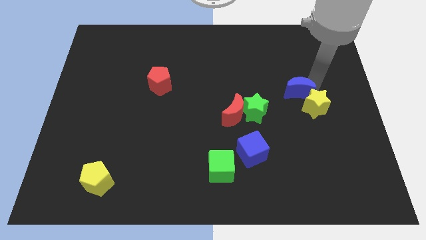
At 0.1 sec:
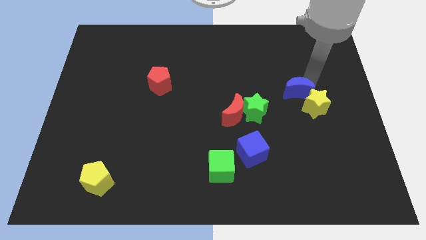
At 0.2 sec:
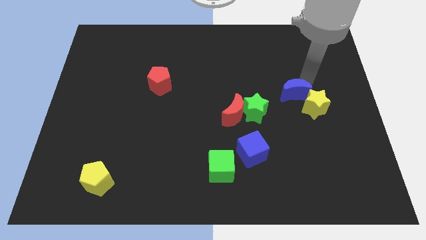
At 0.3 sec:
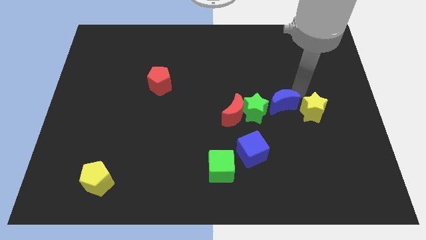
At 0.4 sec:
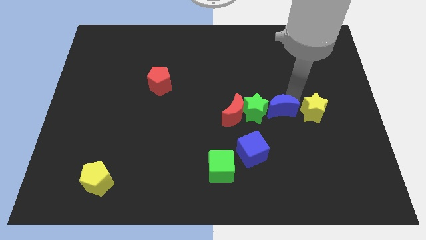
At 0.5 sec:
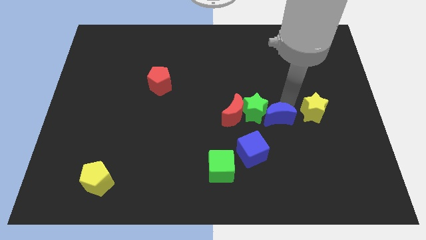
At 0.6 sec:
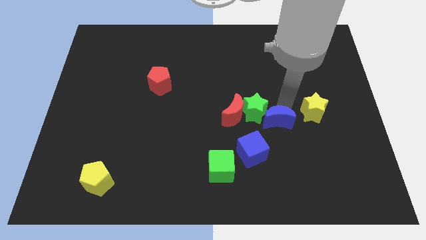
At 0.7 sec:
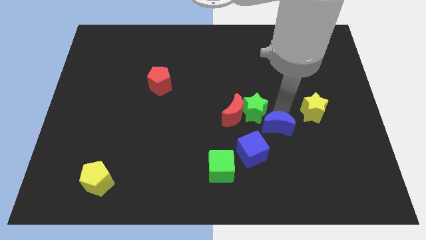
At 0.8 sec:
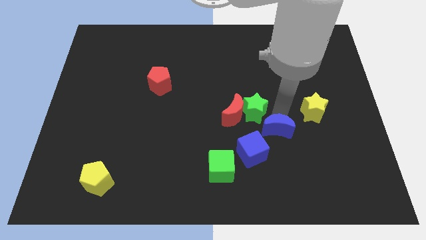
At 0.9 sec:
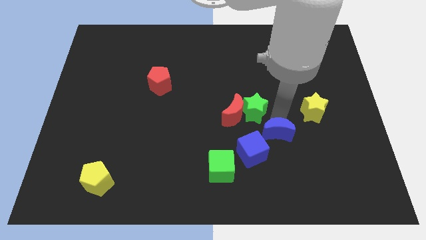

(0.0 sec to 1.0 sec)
separate the blue crescent and yellow star

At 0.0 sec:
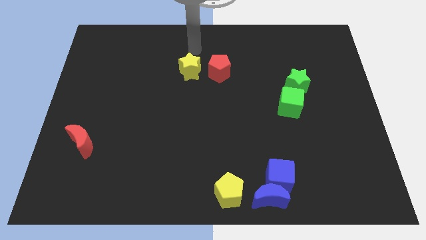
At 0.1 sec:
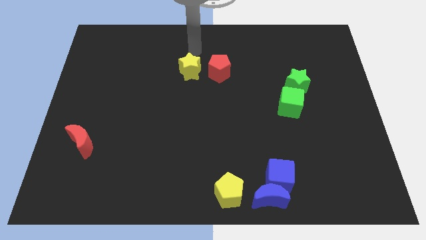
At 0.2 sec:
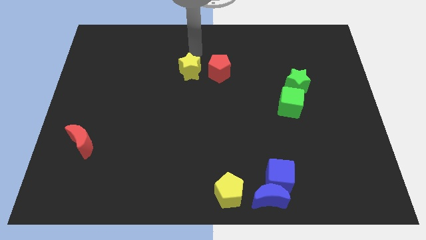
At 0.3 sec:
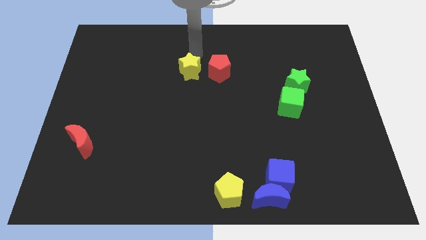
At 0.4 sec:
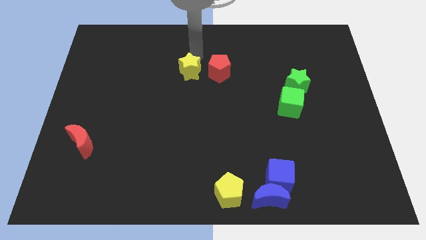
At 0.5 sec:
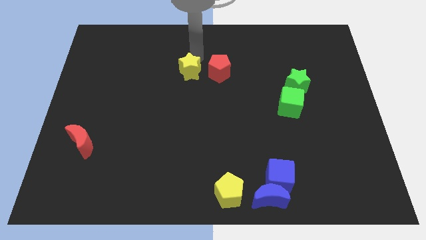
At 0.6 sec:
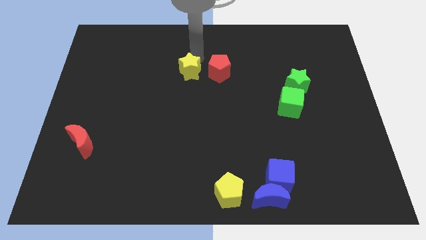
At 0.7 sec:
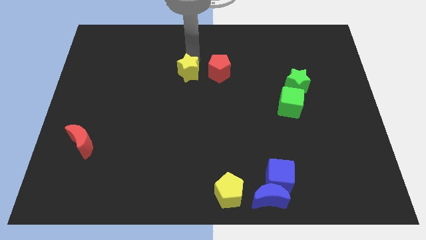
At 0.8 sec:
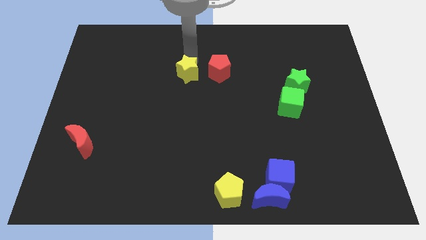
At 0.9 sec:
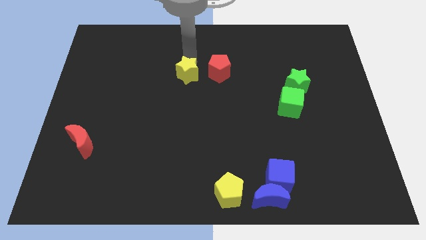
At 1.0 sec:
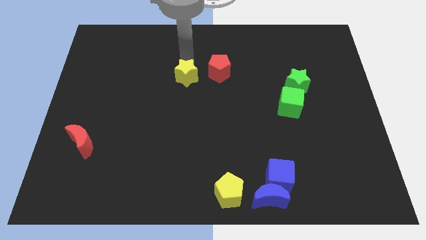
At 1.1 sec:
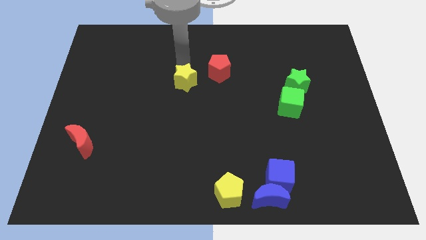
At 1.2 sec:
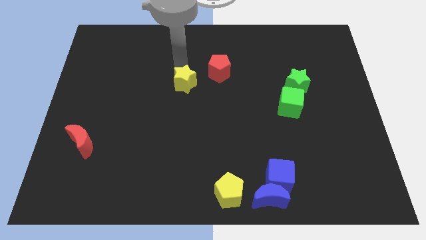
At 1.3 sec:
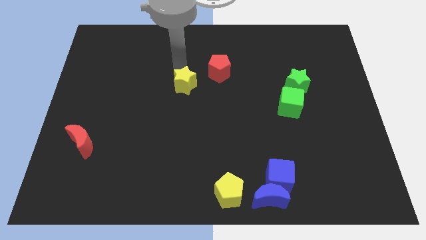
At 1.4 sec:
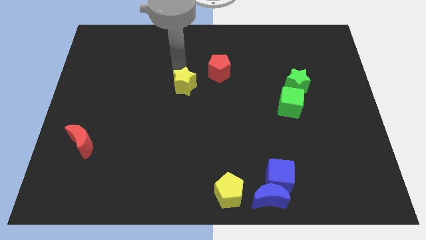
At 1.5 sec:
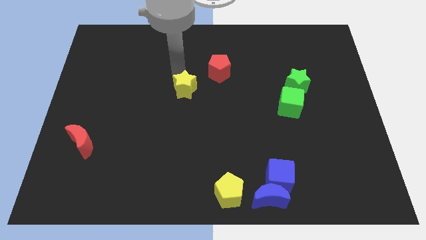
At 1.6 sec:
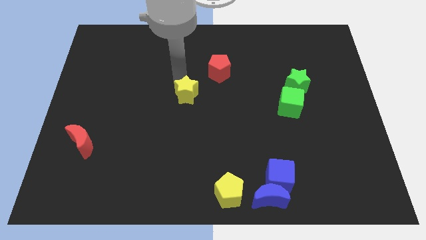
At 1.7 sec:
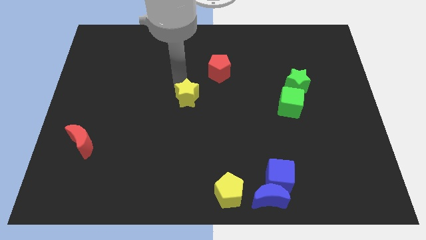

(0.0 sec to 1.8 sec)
move the yellow star away from the left side of the red pentagon

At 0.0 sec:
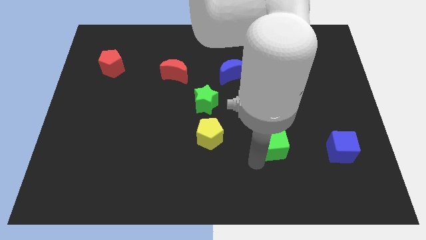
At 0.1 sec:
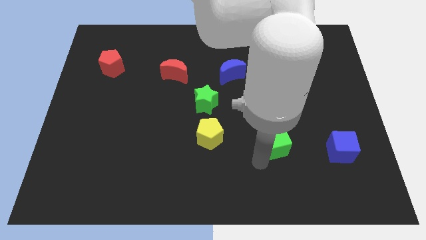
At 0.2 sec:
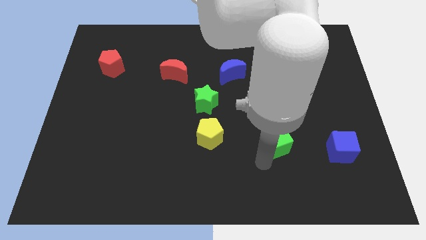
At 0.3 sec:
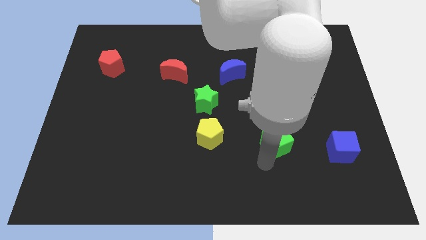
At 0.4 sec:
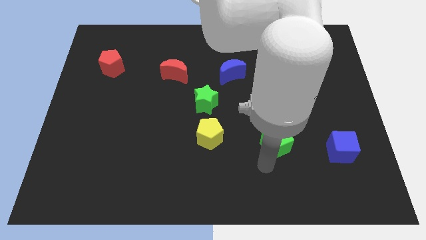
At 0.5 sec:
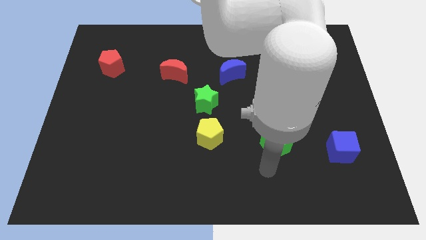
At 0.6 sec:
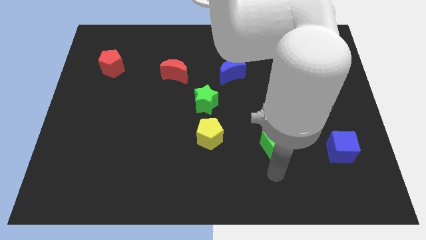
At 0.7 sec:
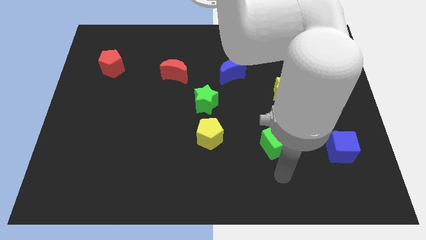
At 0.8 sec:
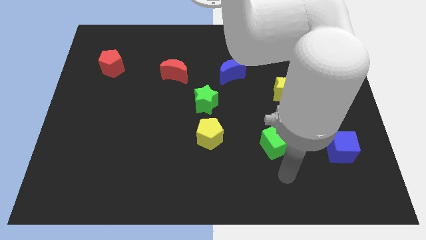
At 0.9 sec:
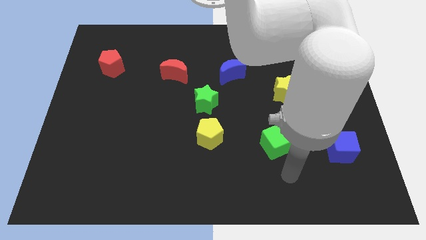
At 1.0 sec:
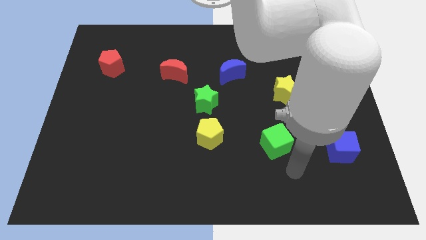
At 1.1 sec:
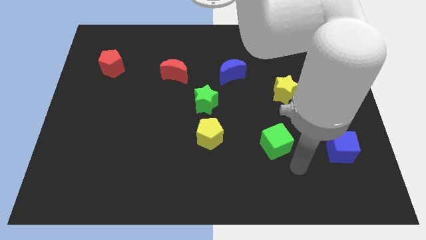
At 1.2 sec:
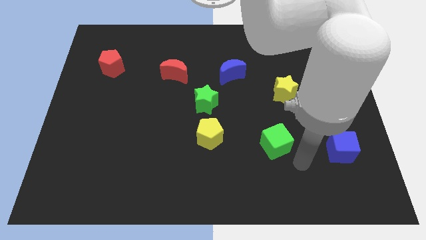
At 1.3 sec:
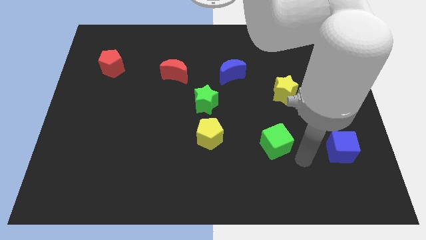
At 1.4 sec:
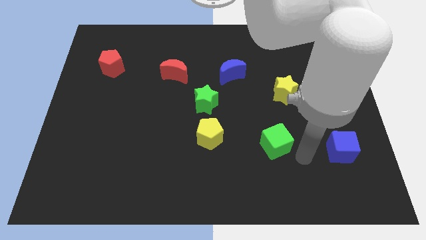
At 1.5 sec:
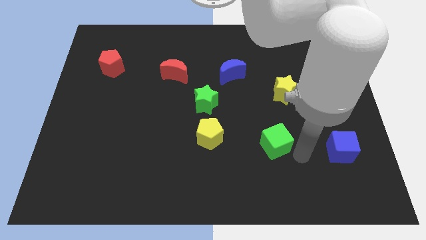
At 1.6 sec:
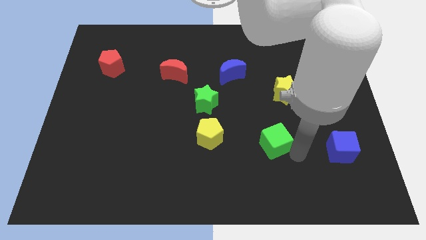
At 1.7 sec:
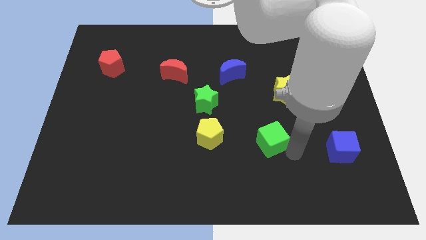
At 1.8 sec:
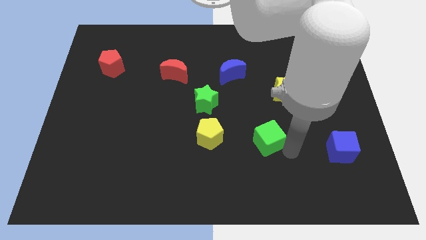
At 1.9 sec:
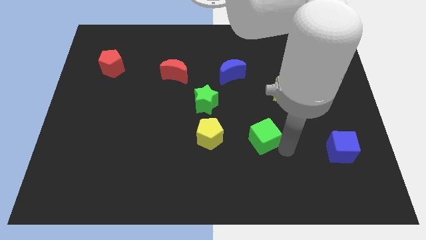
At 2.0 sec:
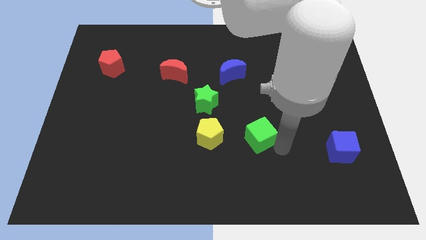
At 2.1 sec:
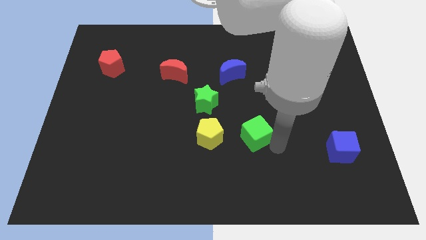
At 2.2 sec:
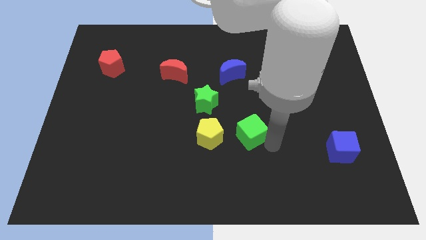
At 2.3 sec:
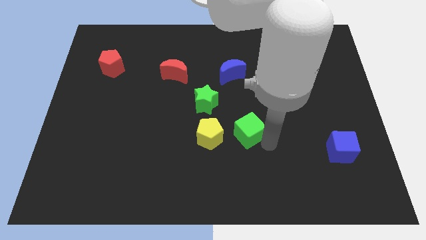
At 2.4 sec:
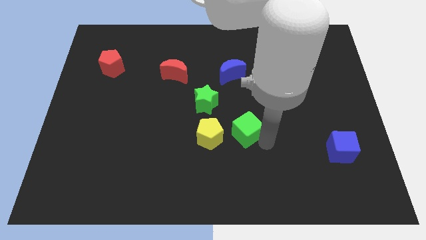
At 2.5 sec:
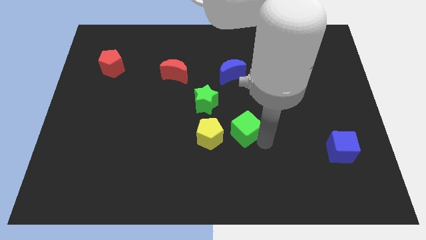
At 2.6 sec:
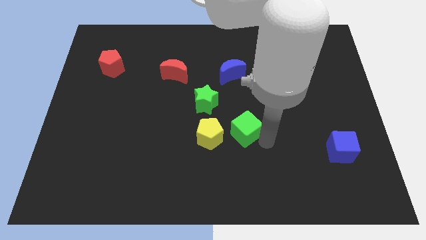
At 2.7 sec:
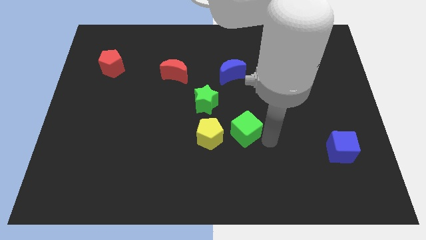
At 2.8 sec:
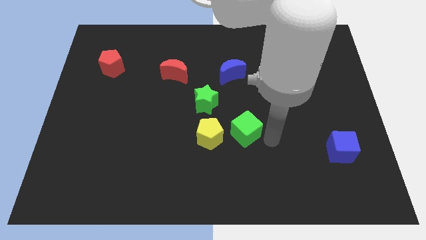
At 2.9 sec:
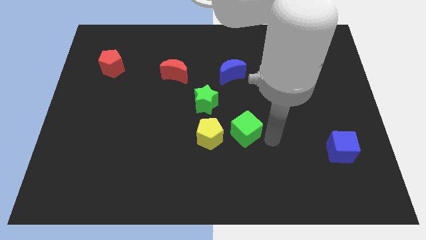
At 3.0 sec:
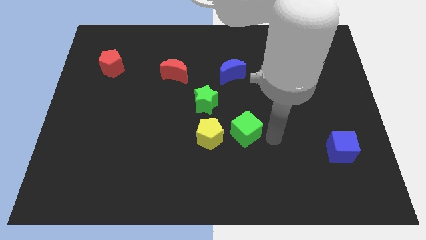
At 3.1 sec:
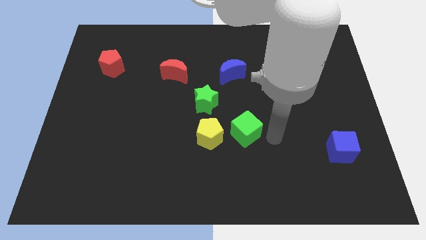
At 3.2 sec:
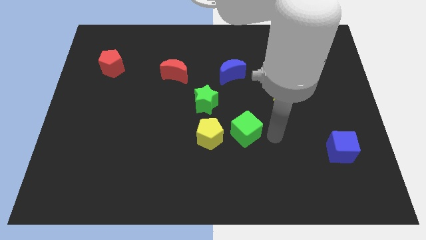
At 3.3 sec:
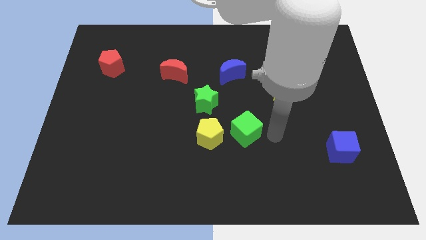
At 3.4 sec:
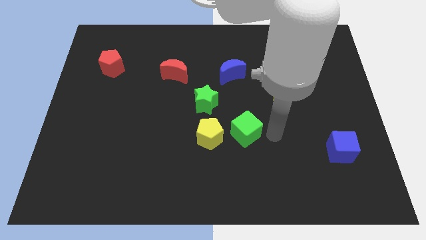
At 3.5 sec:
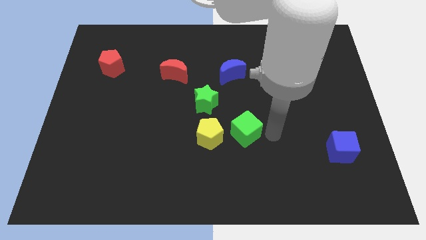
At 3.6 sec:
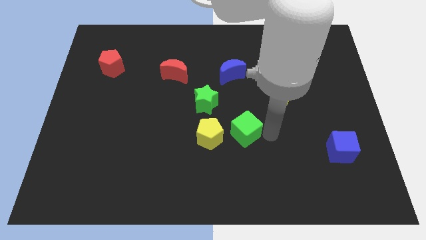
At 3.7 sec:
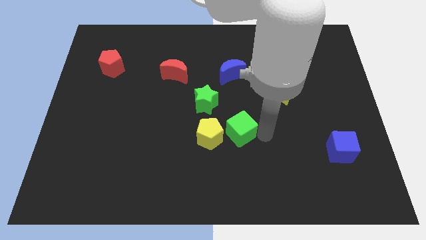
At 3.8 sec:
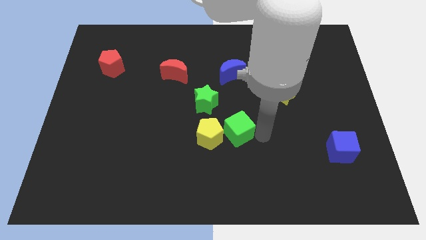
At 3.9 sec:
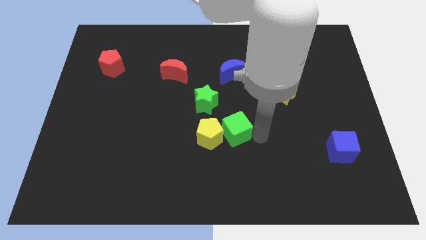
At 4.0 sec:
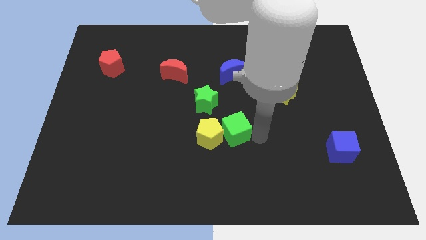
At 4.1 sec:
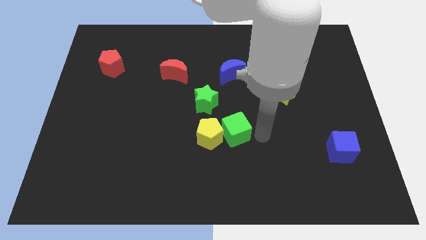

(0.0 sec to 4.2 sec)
drag the green cube to the right of yellow pentagon

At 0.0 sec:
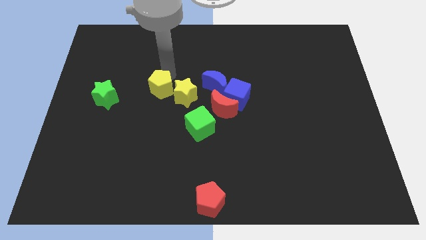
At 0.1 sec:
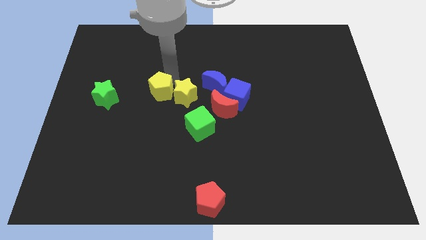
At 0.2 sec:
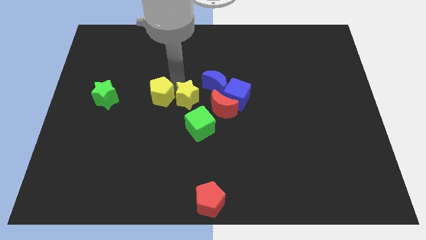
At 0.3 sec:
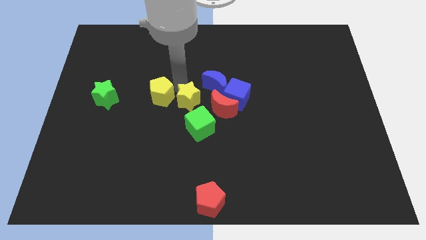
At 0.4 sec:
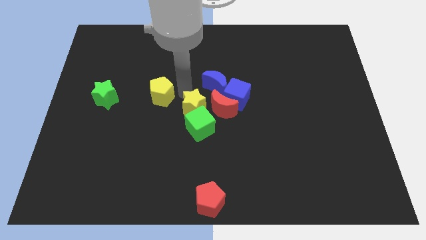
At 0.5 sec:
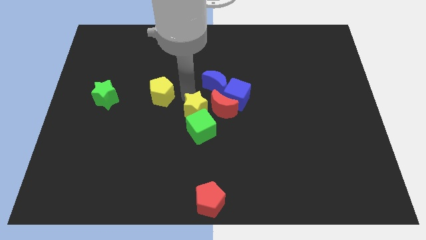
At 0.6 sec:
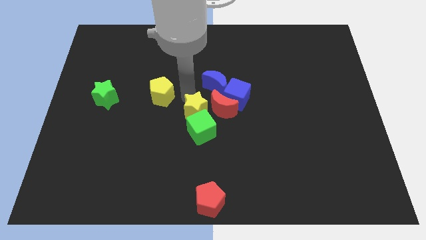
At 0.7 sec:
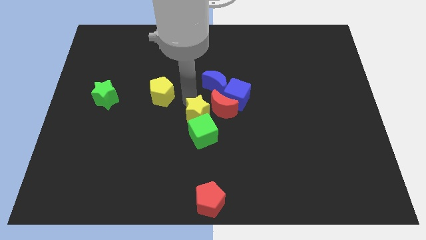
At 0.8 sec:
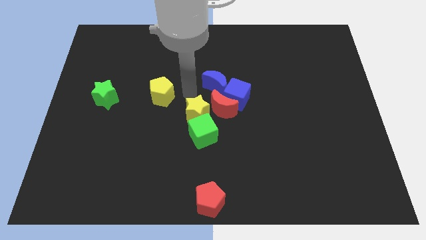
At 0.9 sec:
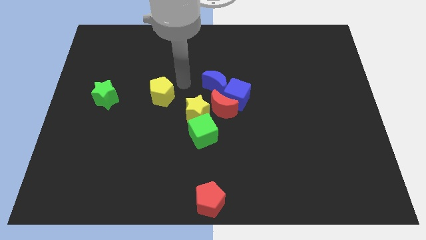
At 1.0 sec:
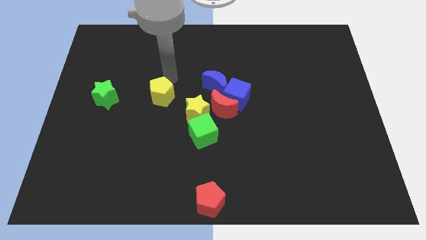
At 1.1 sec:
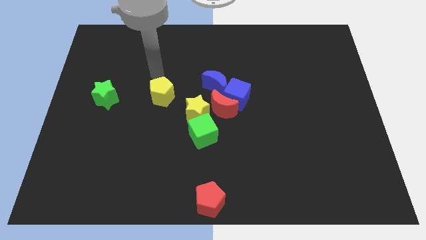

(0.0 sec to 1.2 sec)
separate the yellow star from the yellow pentagon

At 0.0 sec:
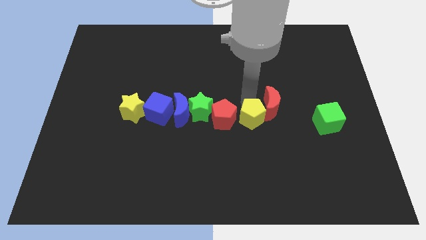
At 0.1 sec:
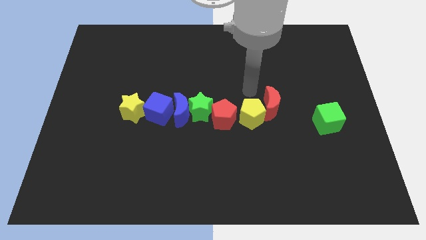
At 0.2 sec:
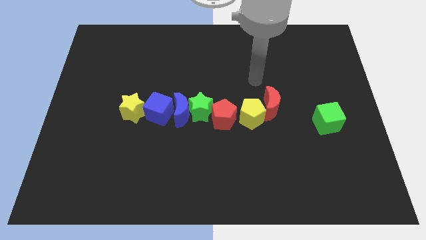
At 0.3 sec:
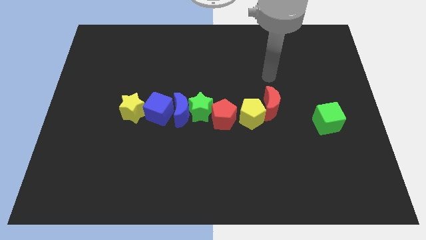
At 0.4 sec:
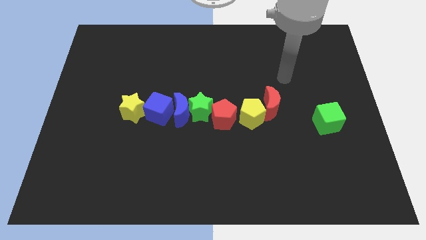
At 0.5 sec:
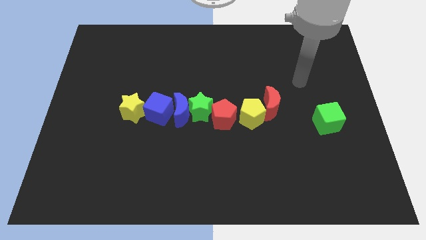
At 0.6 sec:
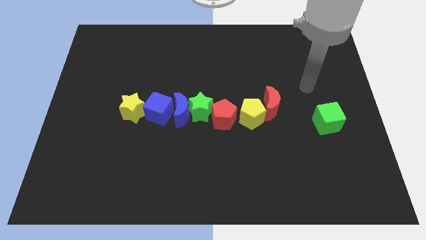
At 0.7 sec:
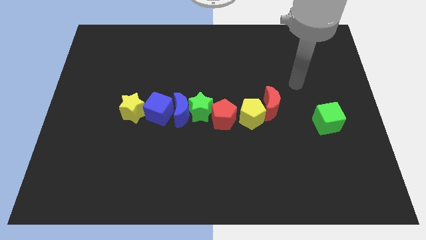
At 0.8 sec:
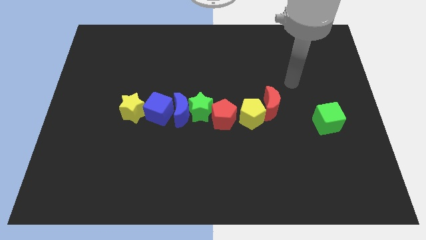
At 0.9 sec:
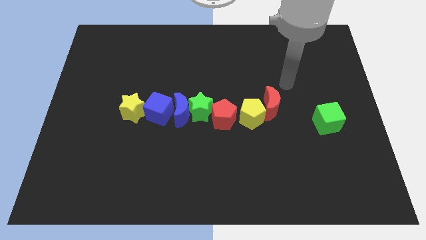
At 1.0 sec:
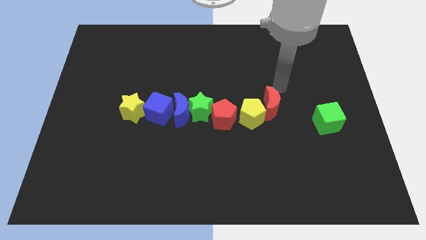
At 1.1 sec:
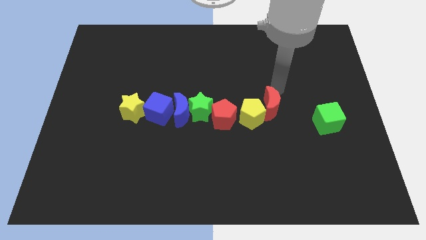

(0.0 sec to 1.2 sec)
move your arm away from the yellow pentagon
